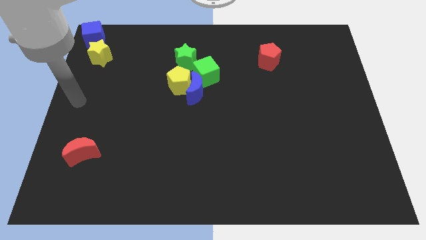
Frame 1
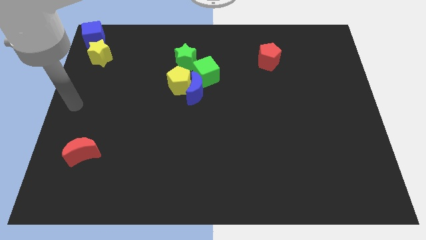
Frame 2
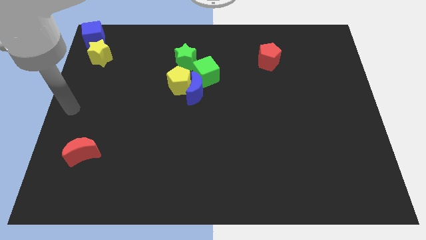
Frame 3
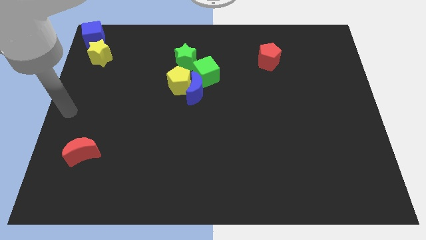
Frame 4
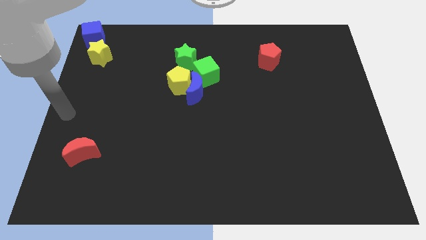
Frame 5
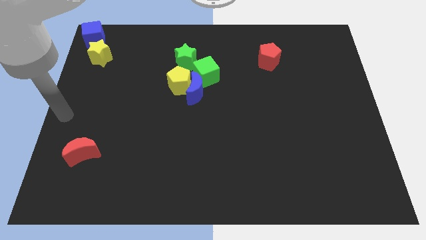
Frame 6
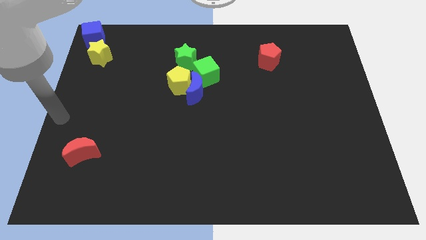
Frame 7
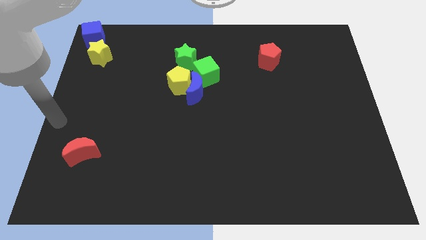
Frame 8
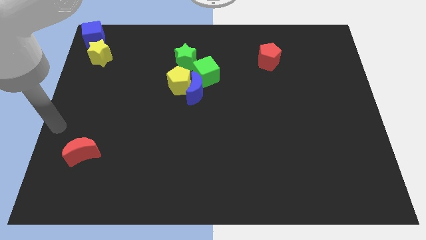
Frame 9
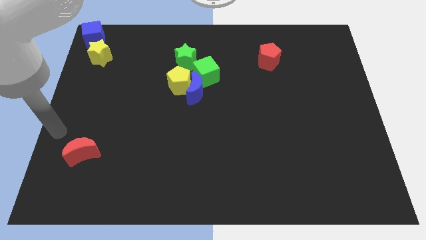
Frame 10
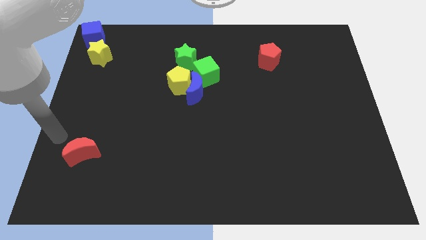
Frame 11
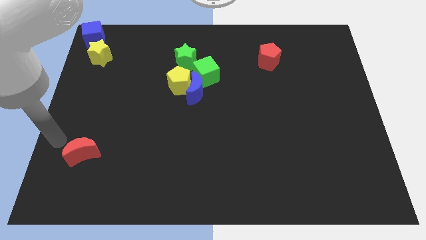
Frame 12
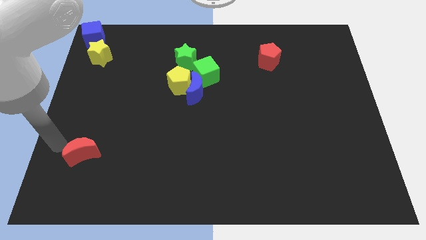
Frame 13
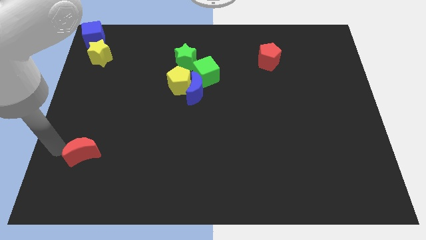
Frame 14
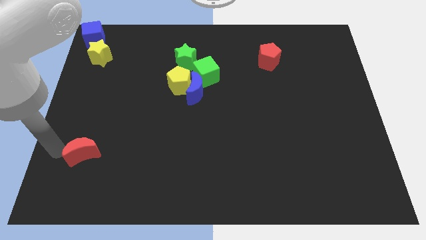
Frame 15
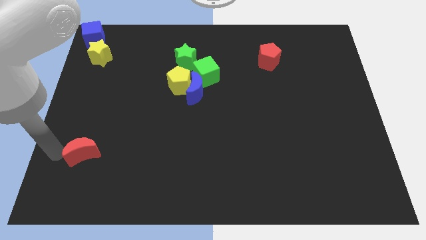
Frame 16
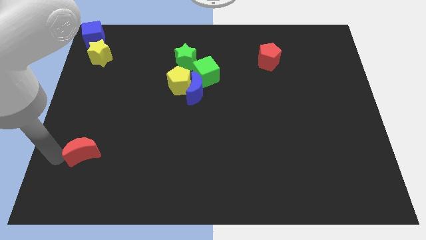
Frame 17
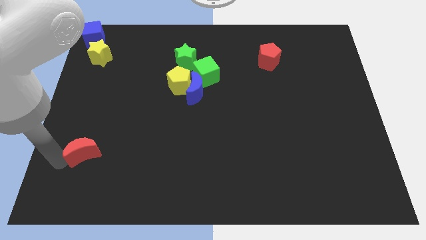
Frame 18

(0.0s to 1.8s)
tap the left side of the red crescent

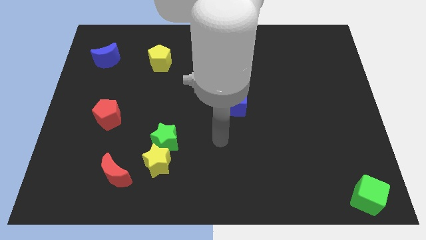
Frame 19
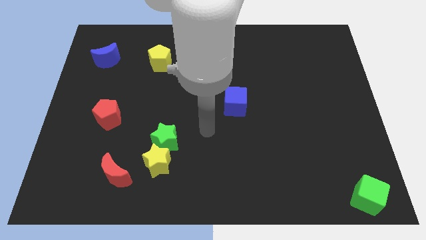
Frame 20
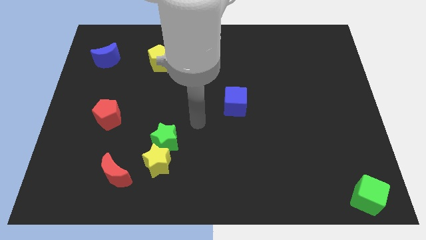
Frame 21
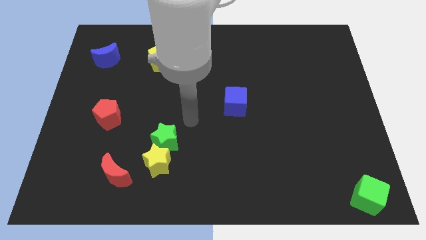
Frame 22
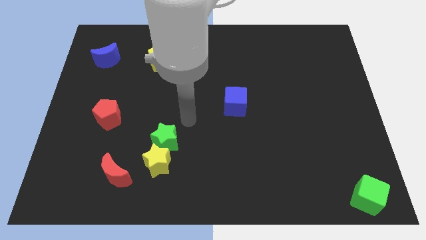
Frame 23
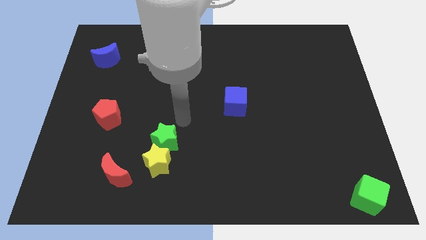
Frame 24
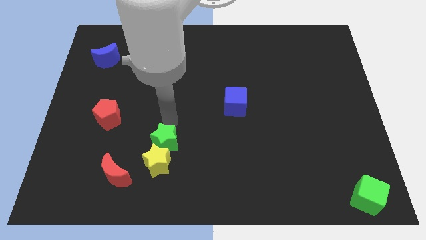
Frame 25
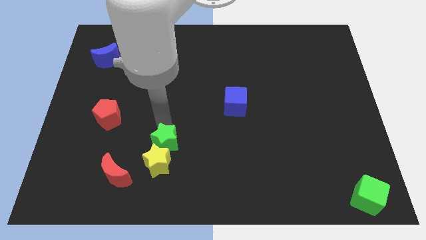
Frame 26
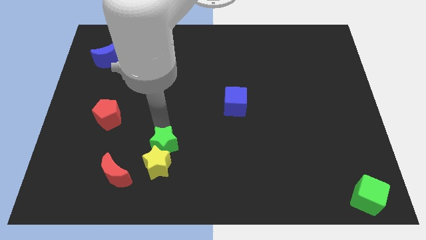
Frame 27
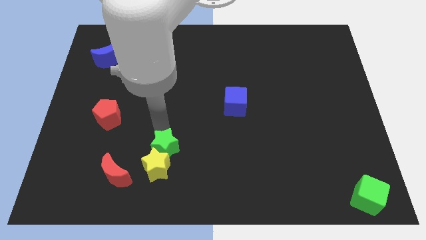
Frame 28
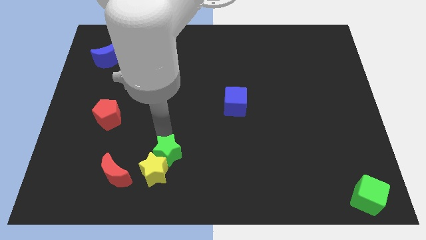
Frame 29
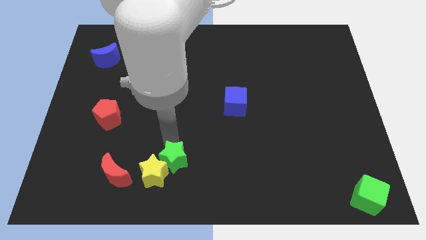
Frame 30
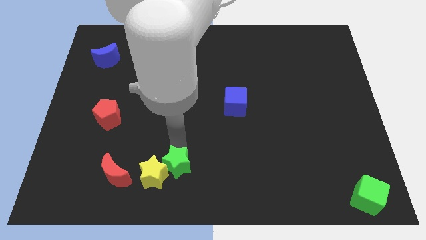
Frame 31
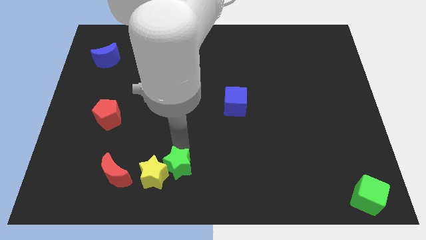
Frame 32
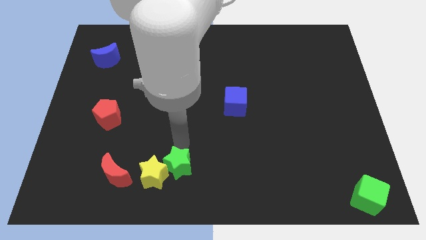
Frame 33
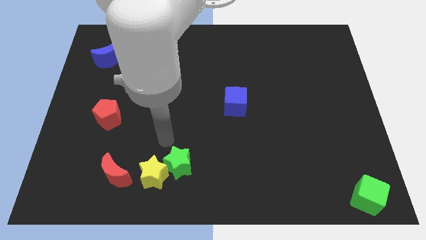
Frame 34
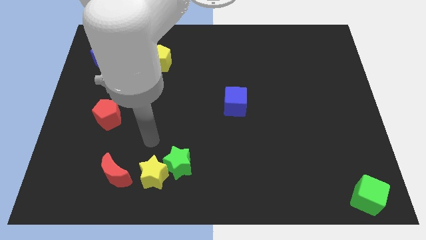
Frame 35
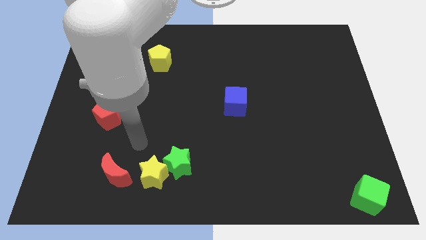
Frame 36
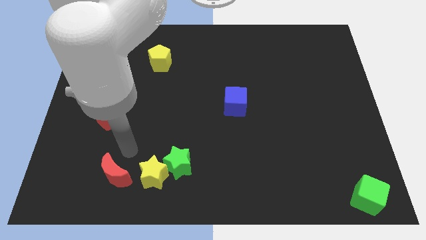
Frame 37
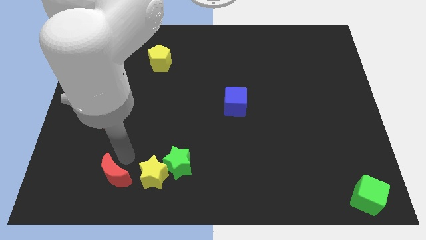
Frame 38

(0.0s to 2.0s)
push the yellow star with the green star

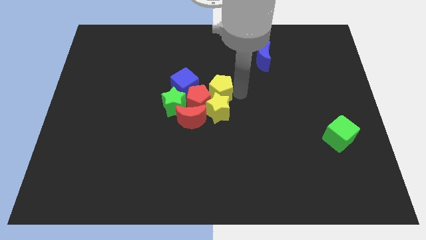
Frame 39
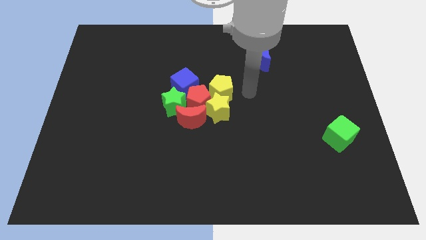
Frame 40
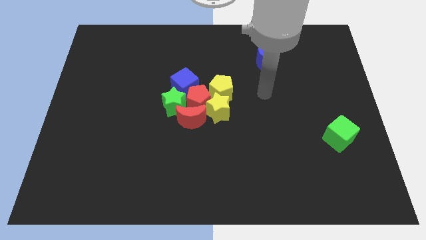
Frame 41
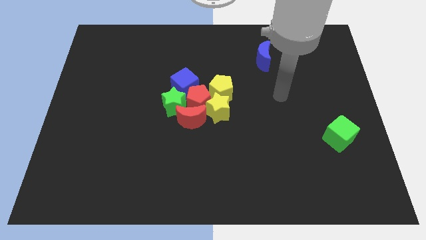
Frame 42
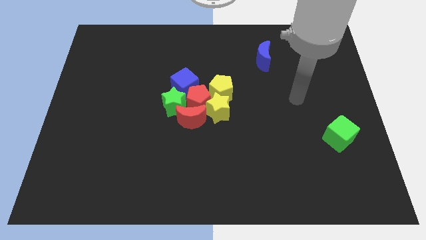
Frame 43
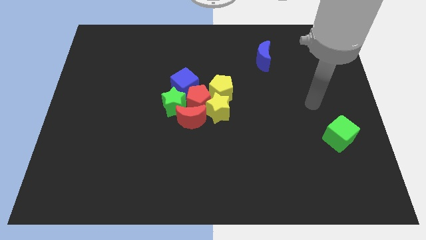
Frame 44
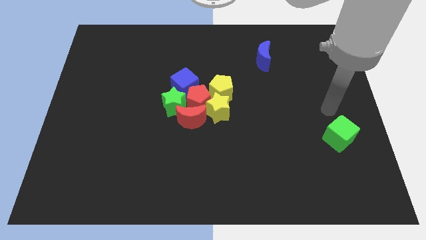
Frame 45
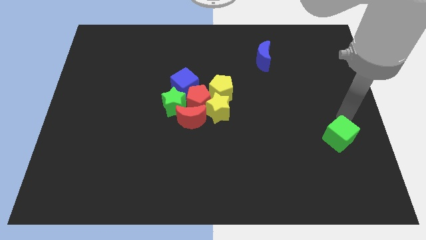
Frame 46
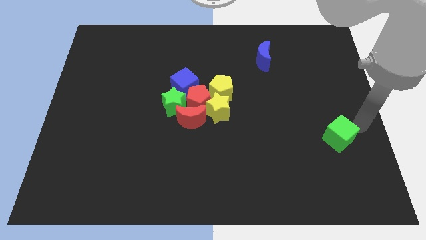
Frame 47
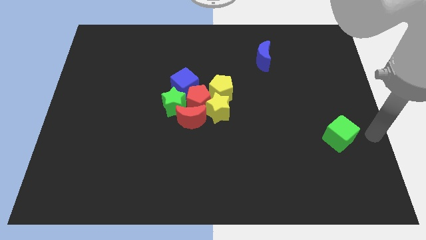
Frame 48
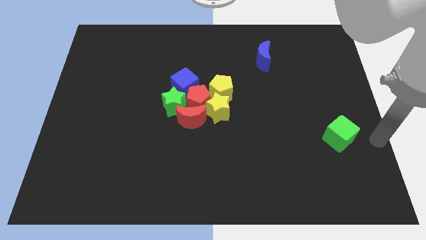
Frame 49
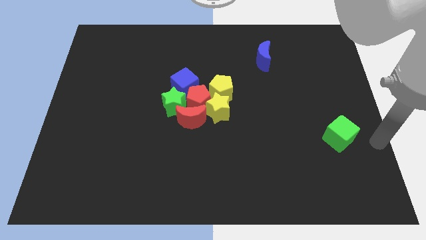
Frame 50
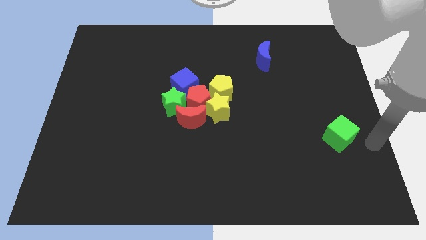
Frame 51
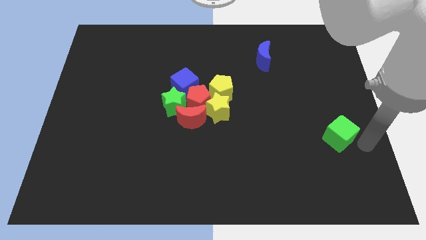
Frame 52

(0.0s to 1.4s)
point the arm to the right of the green cube

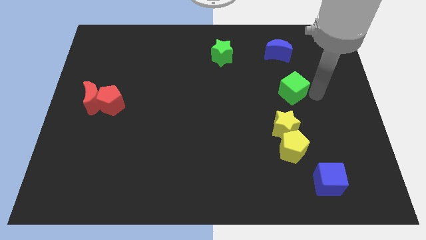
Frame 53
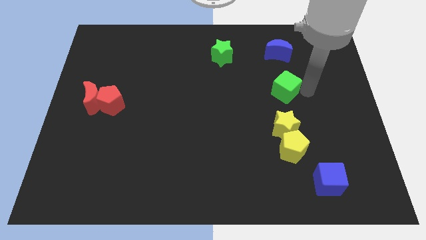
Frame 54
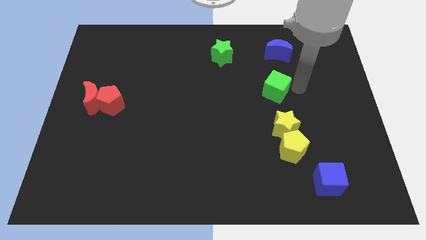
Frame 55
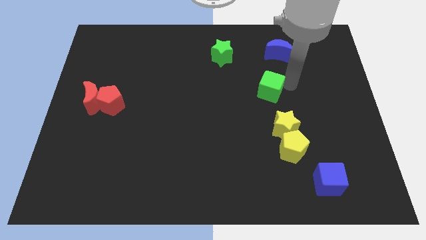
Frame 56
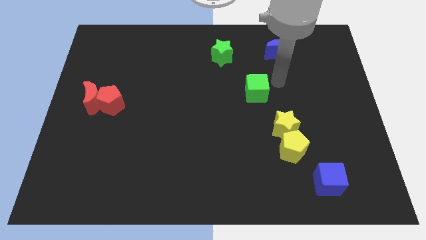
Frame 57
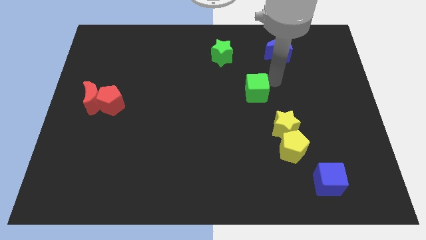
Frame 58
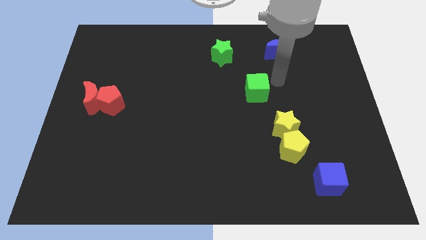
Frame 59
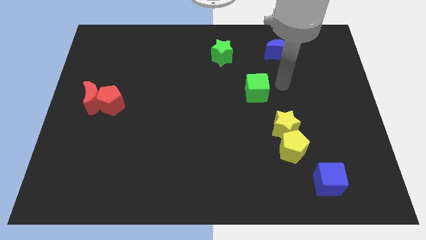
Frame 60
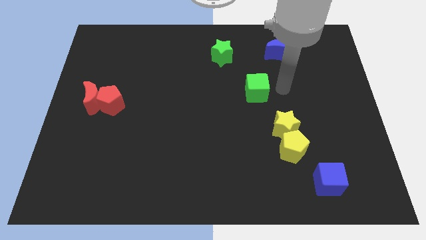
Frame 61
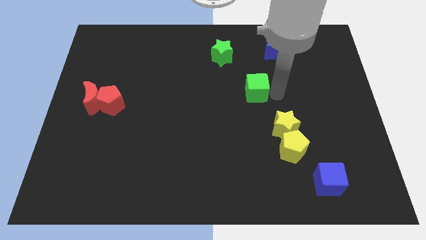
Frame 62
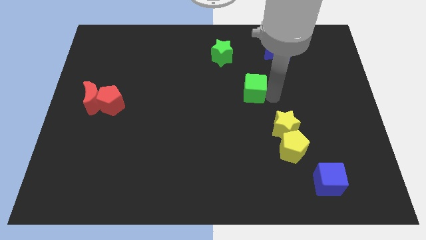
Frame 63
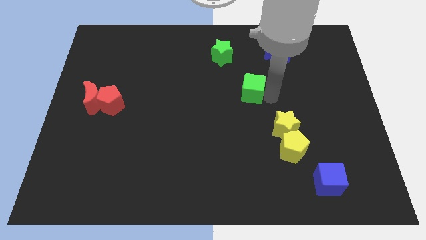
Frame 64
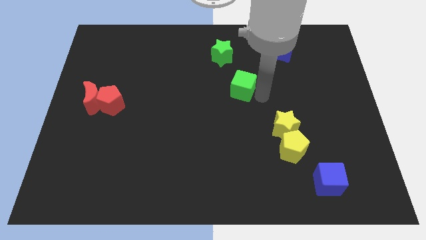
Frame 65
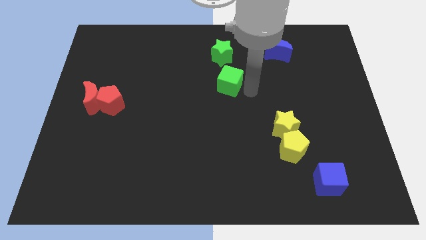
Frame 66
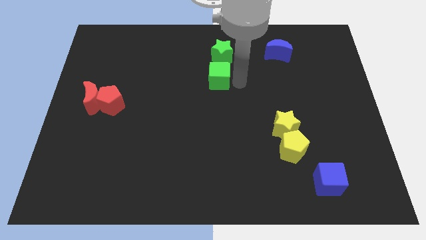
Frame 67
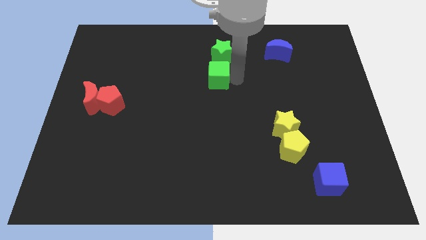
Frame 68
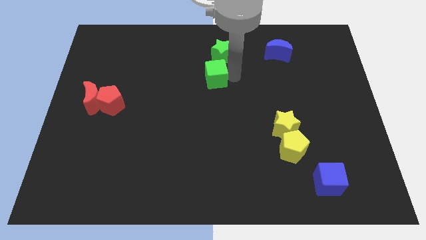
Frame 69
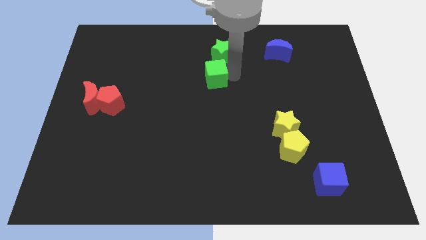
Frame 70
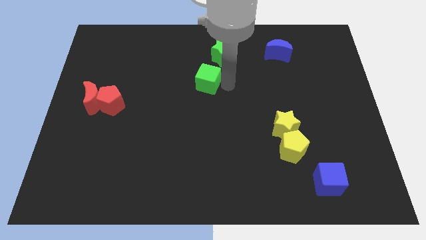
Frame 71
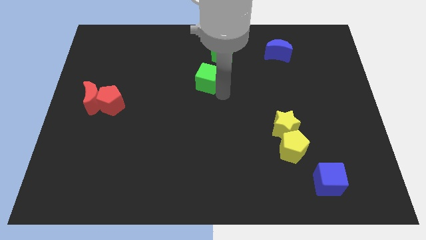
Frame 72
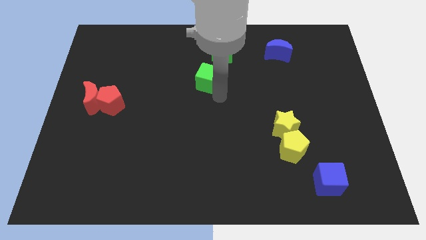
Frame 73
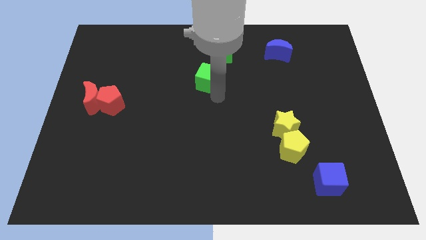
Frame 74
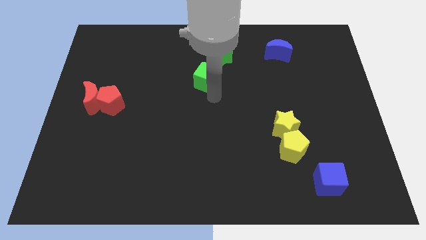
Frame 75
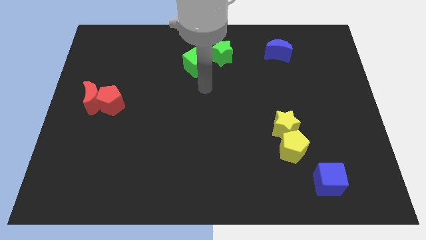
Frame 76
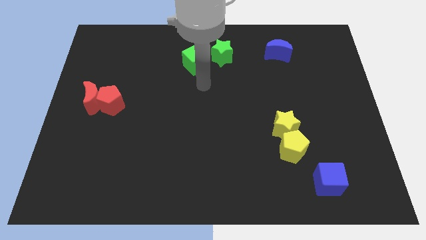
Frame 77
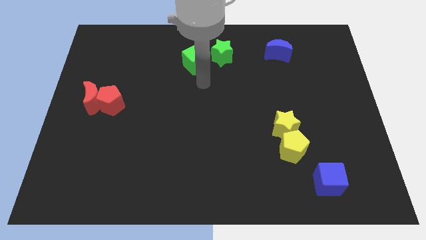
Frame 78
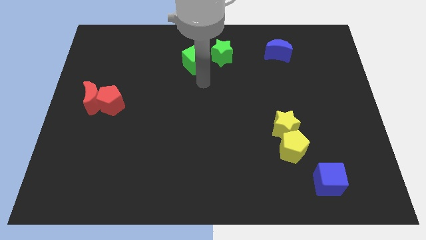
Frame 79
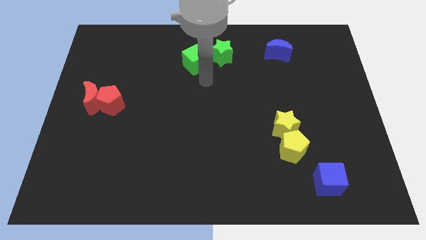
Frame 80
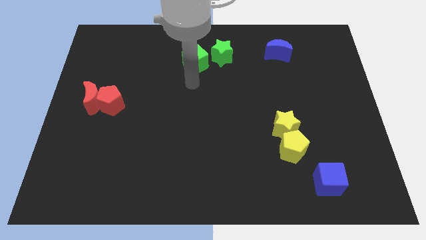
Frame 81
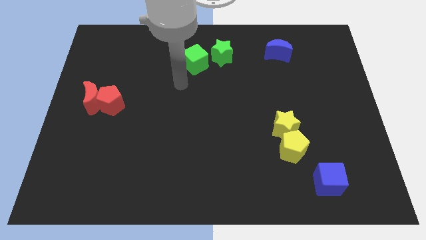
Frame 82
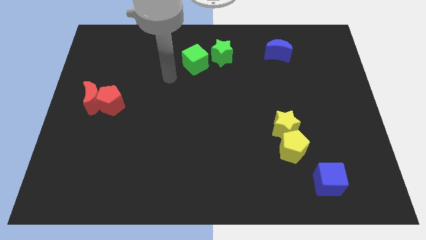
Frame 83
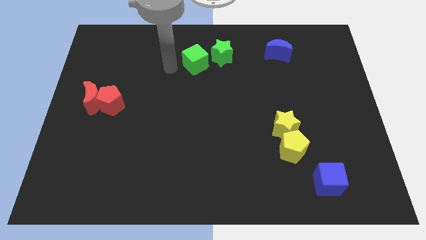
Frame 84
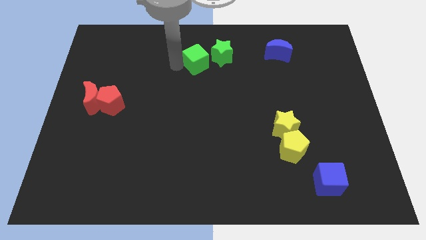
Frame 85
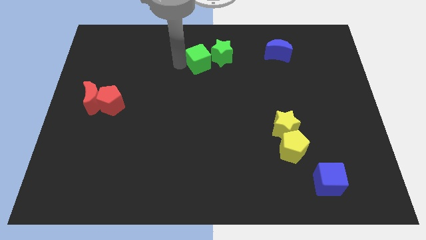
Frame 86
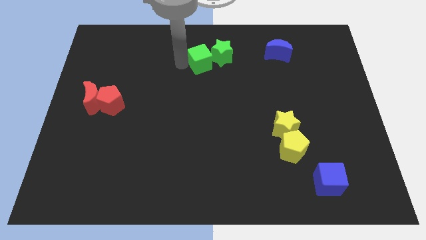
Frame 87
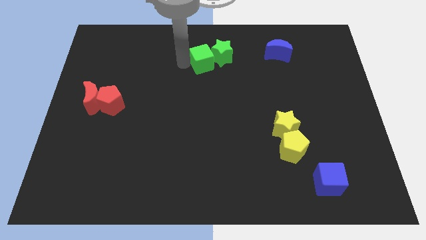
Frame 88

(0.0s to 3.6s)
push the green cube to the left of the green star

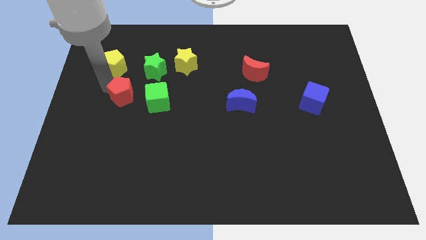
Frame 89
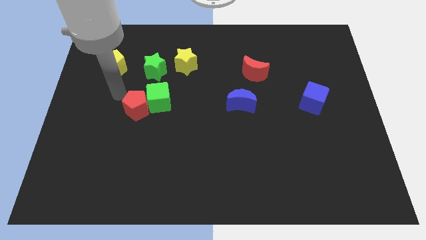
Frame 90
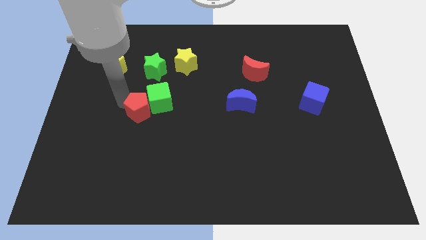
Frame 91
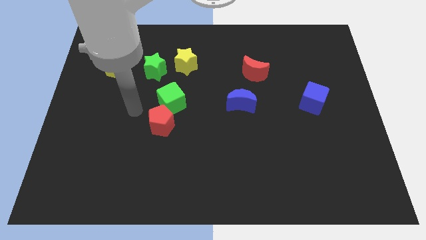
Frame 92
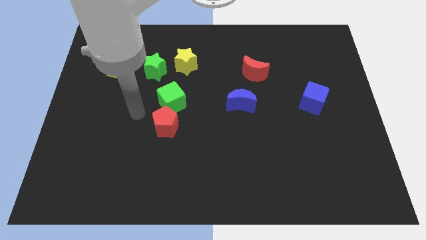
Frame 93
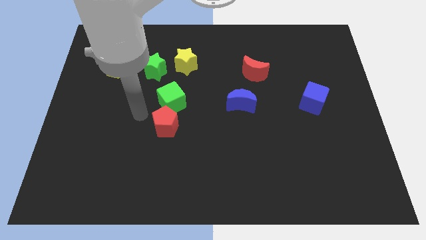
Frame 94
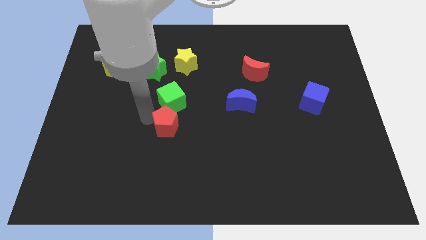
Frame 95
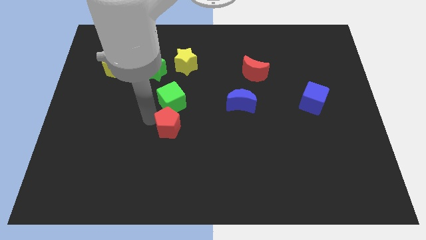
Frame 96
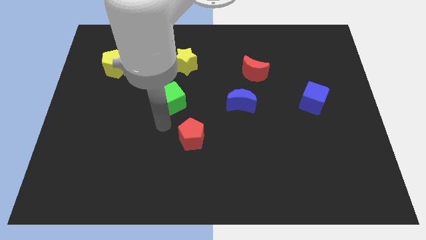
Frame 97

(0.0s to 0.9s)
place the red pentagon below the green cube
